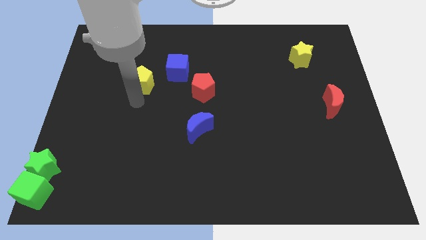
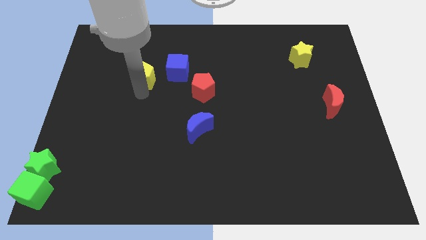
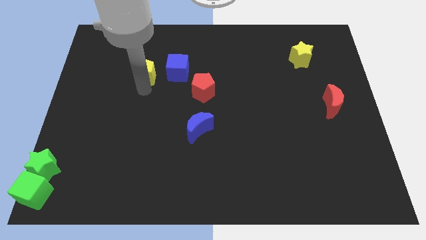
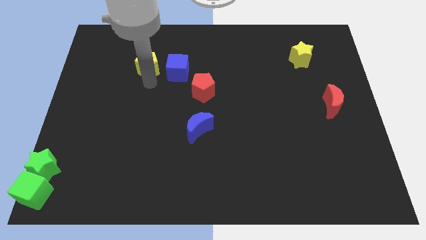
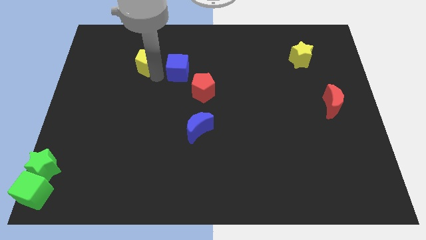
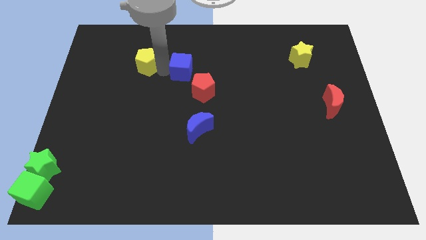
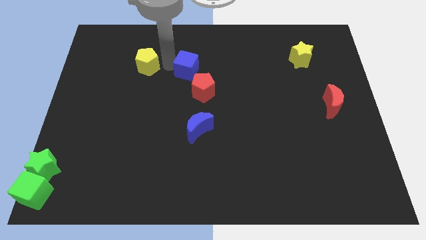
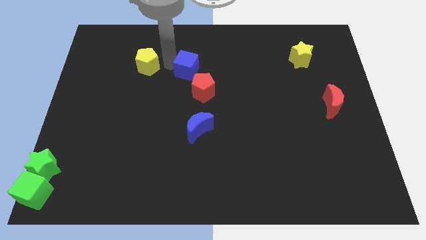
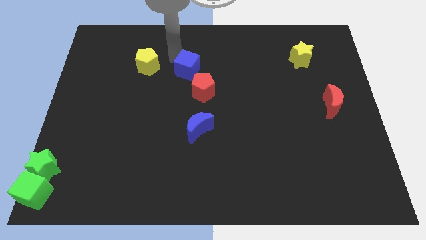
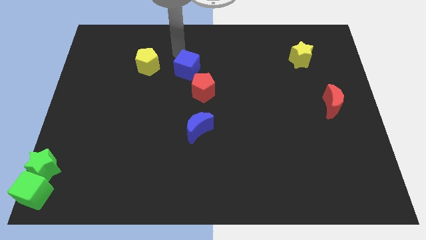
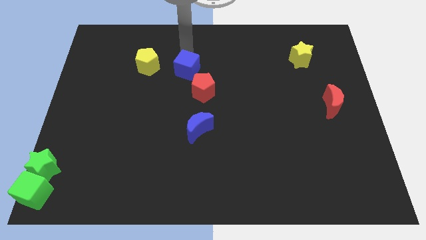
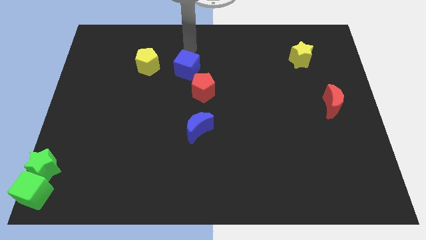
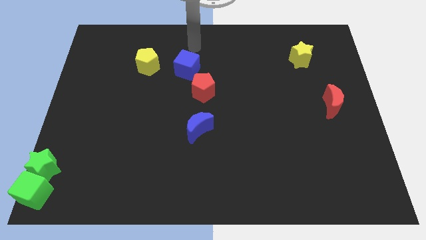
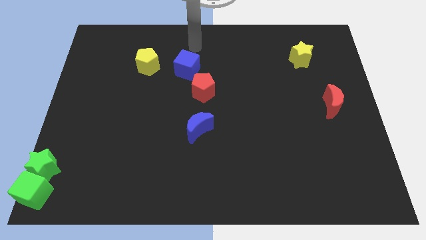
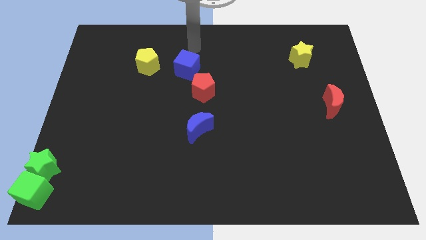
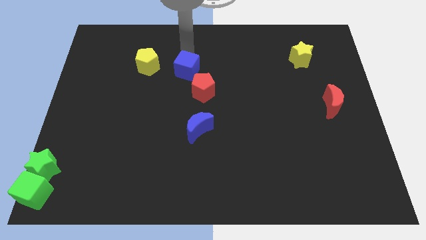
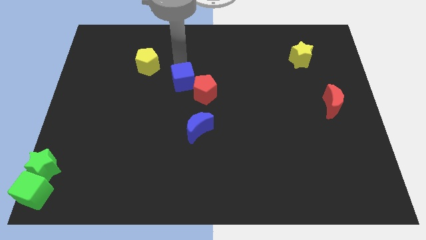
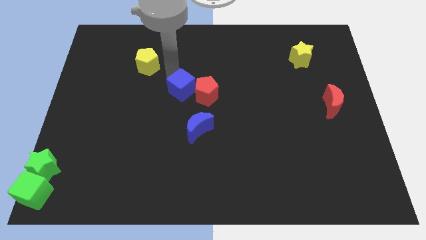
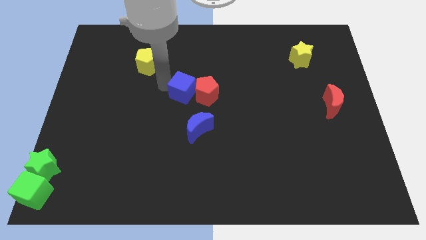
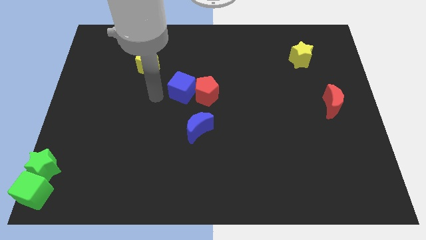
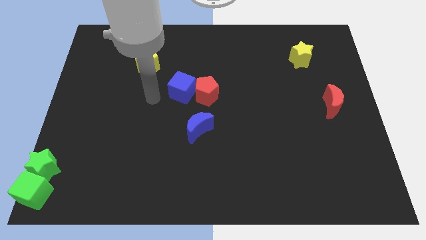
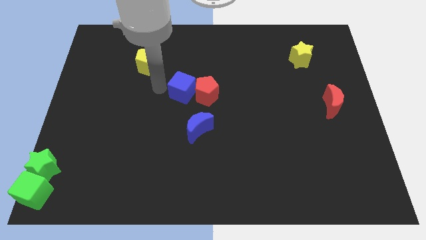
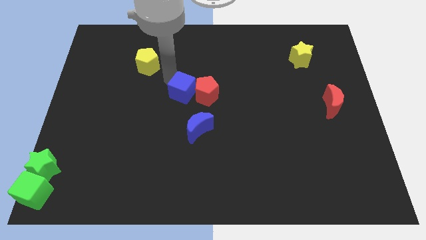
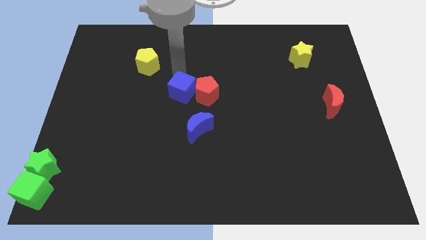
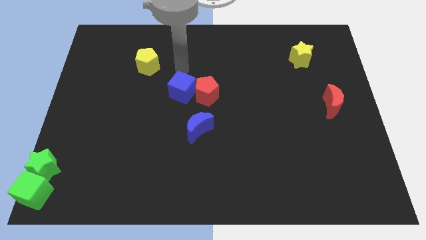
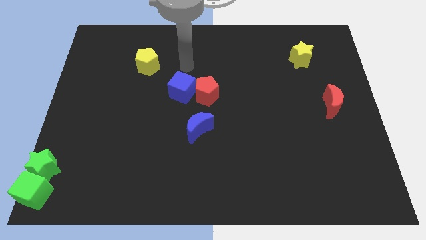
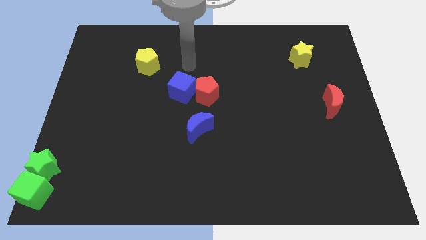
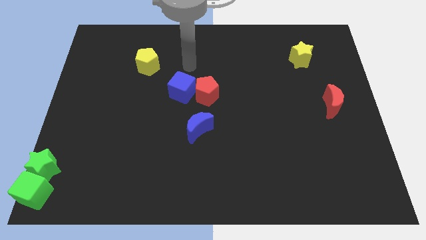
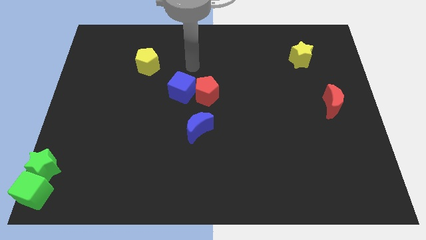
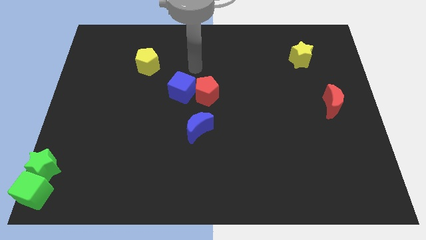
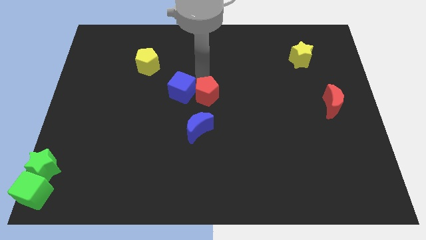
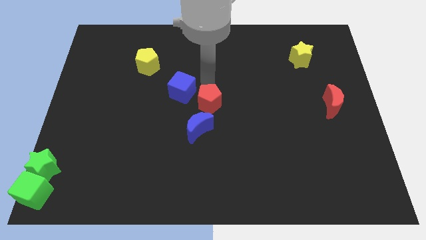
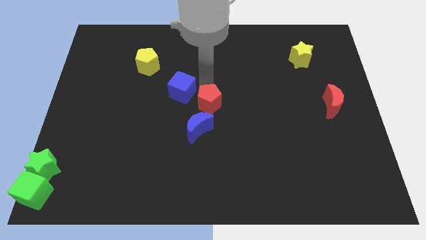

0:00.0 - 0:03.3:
push the blue cube to the left side of the red pentagon

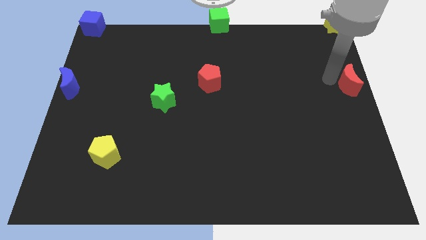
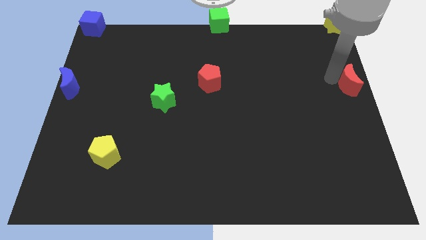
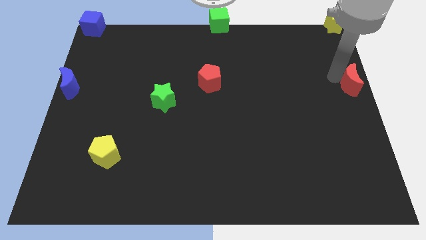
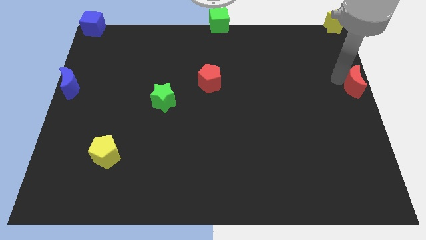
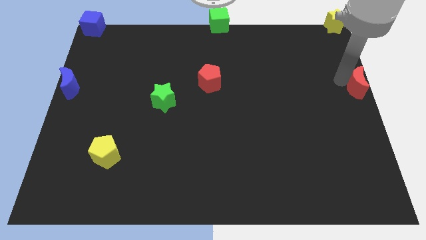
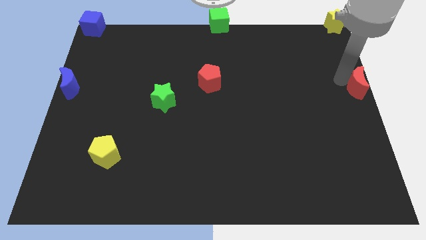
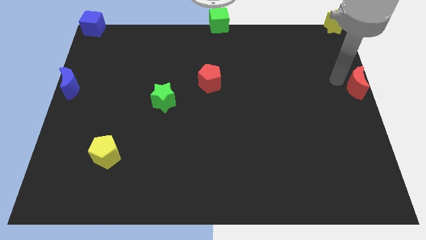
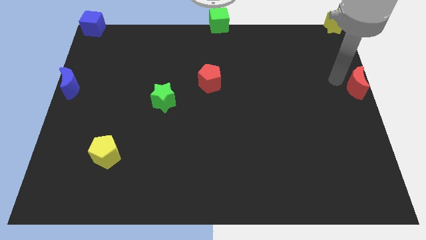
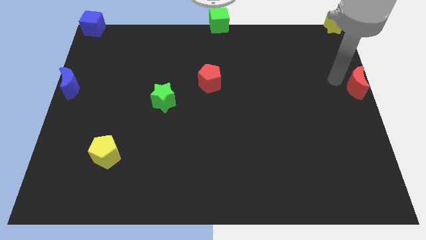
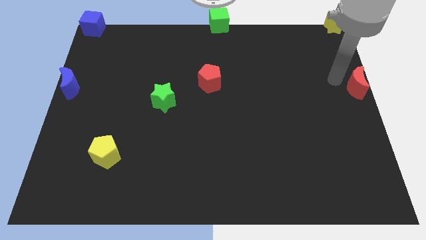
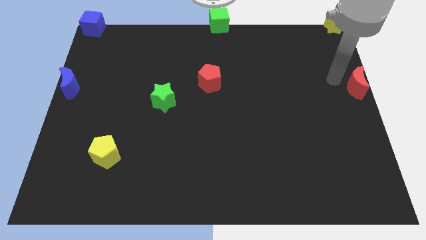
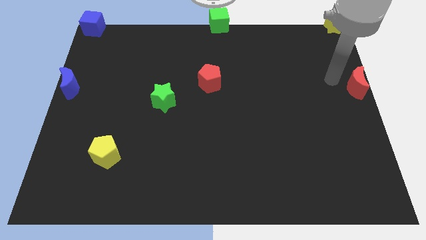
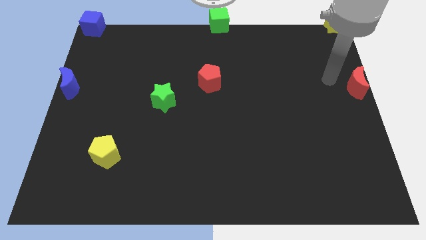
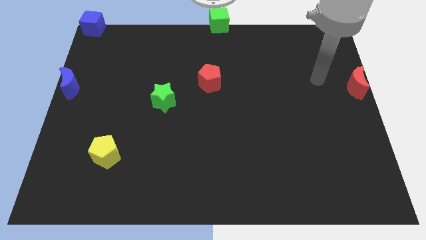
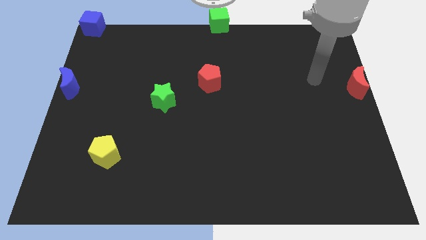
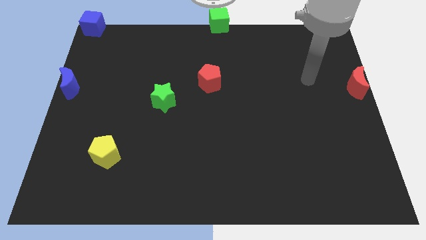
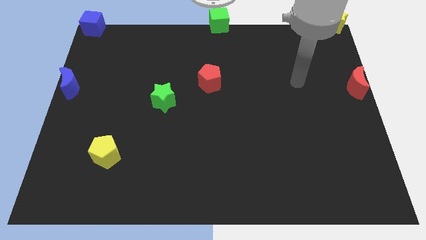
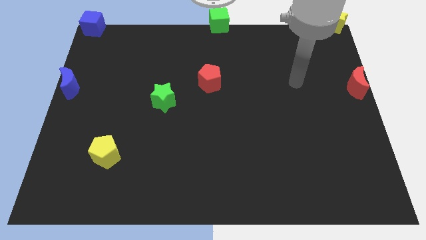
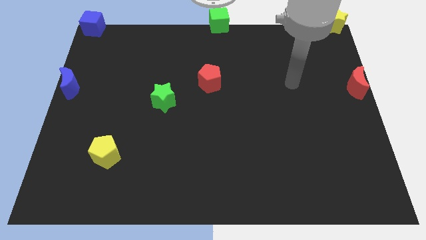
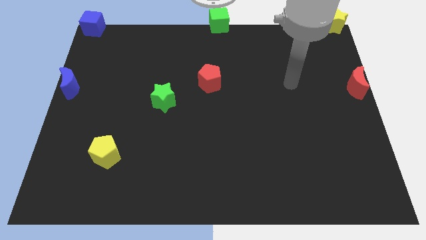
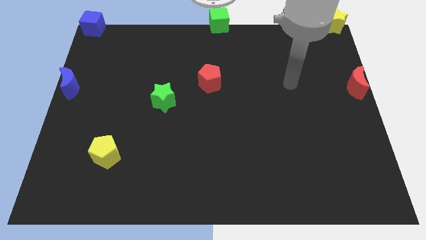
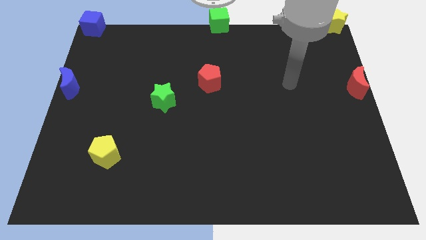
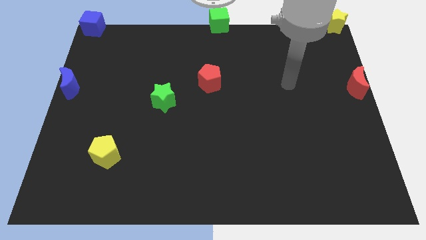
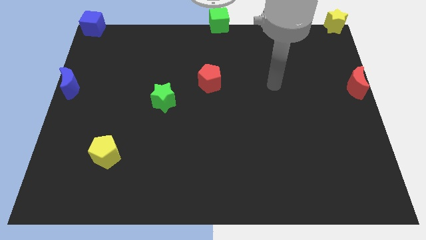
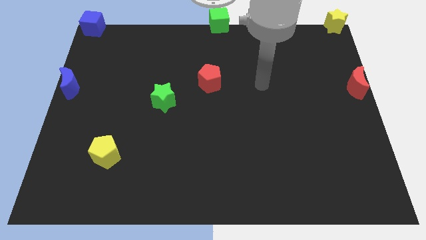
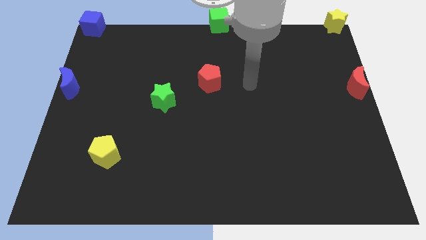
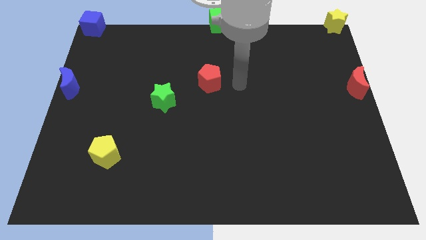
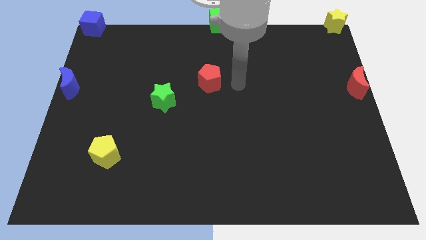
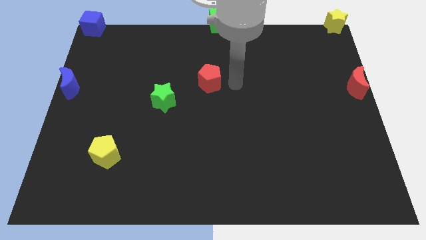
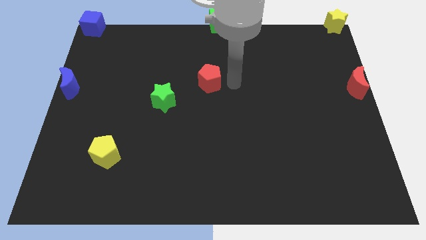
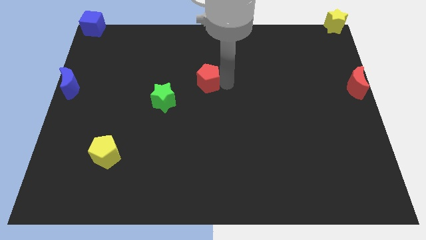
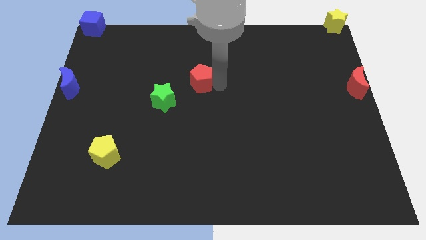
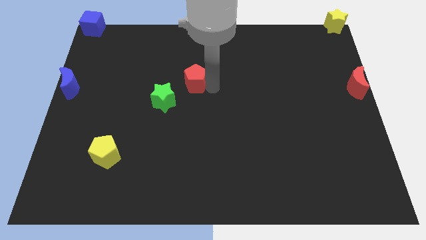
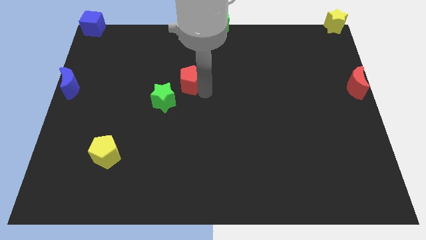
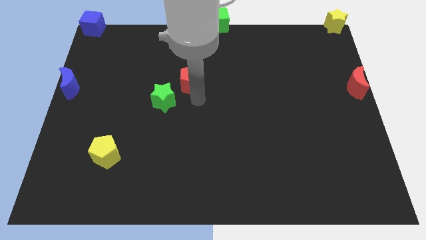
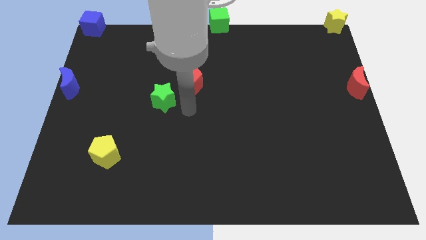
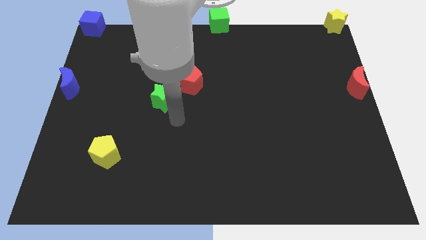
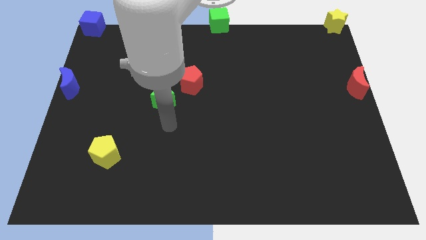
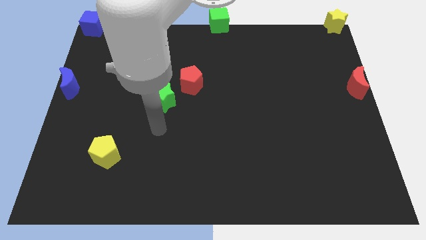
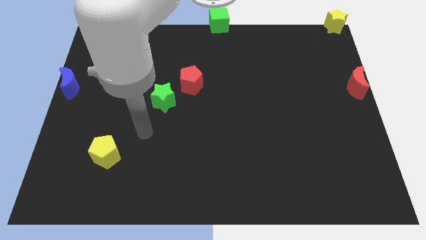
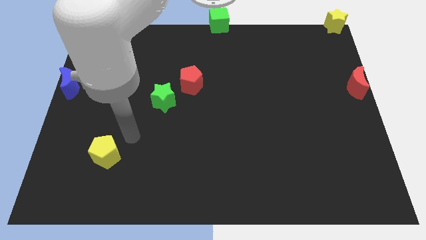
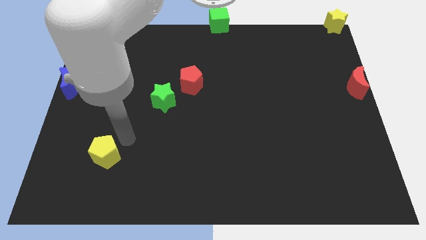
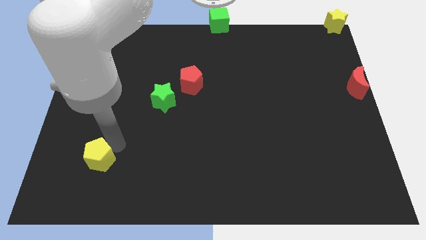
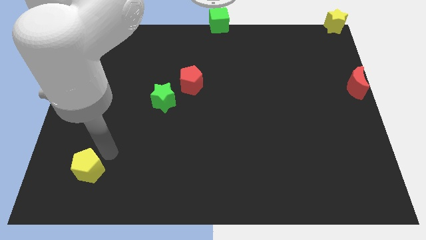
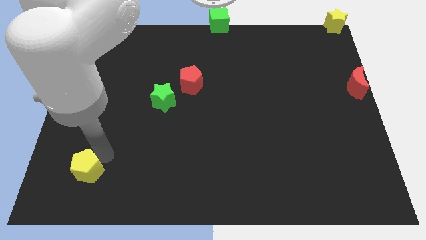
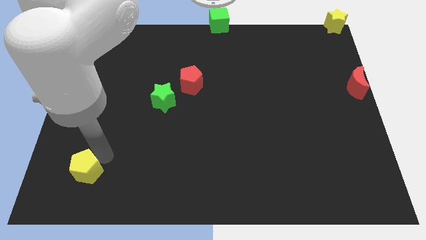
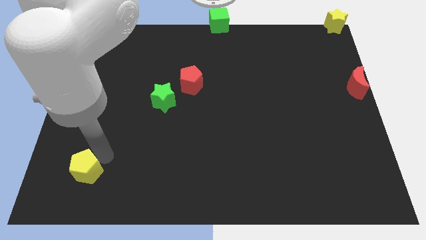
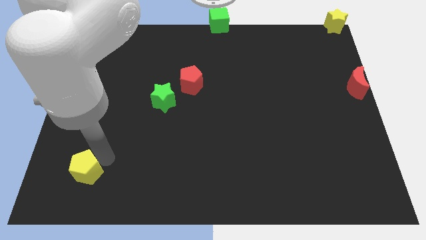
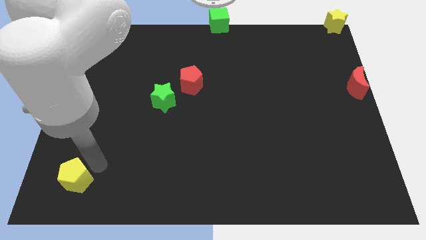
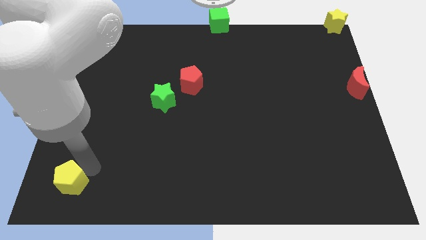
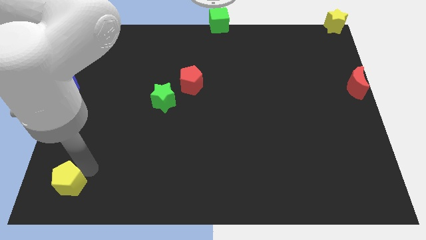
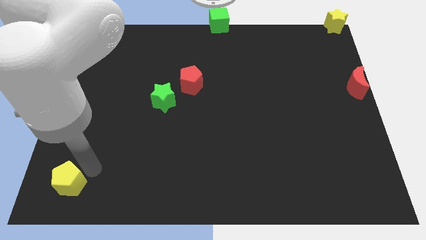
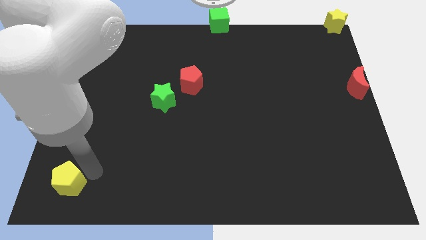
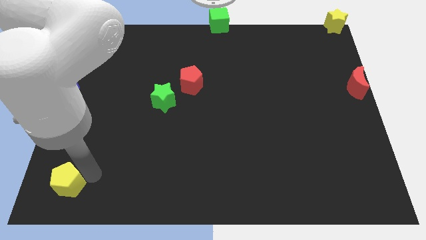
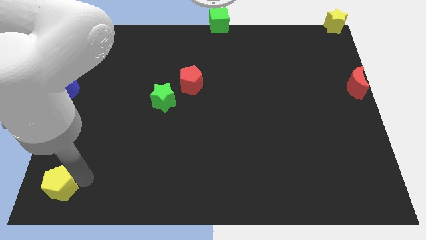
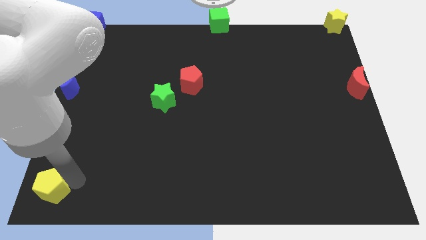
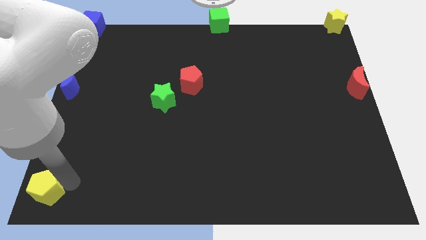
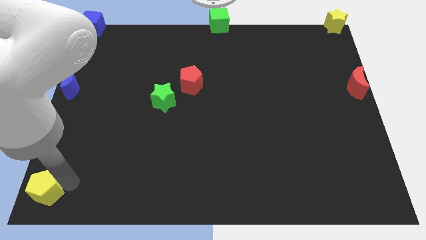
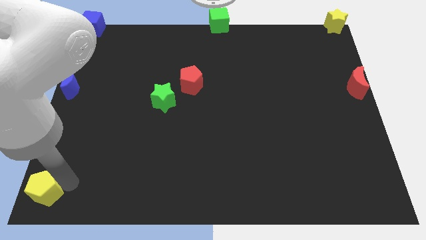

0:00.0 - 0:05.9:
slide the yellow pentagon to the bottom left corner of the board
